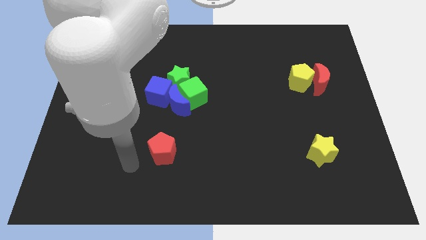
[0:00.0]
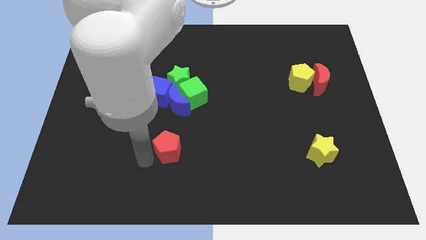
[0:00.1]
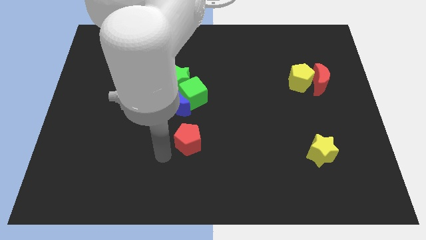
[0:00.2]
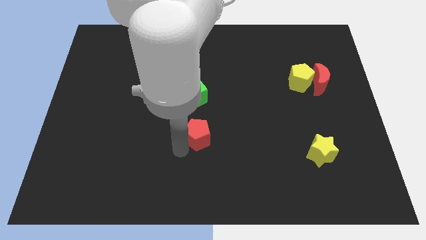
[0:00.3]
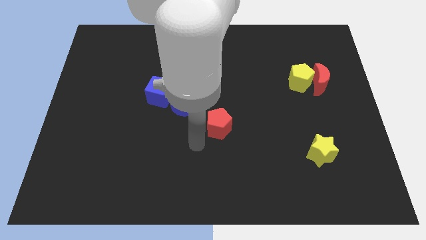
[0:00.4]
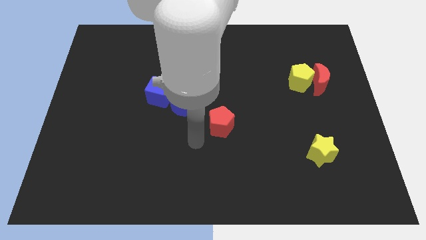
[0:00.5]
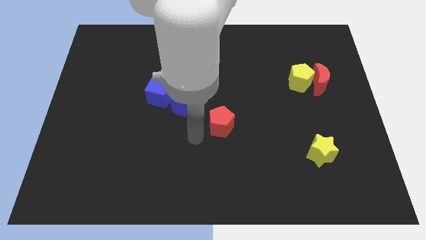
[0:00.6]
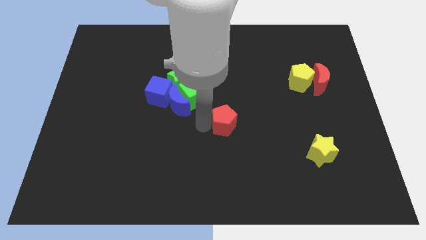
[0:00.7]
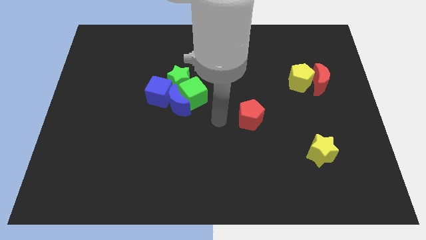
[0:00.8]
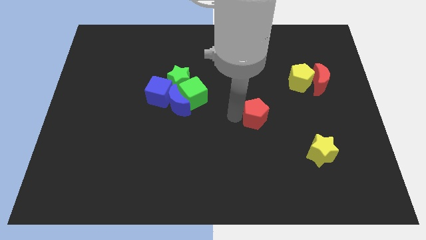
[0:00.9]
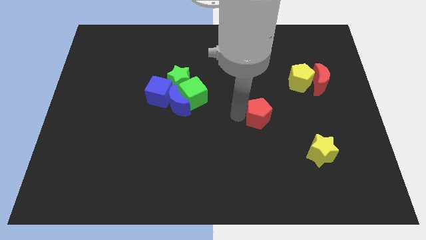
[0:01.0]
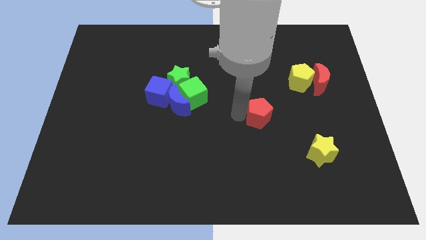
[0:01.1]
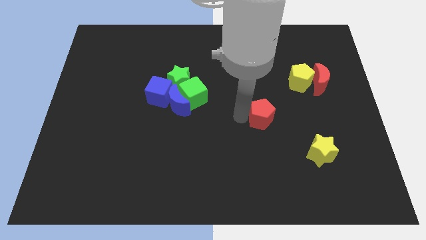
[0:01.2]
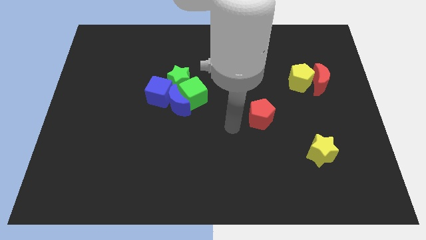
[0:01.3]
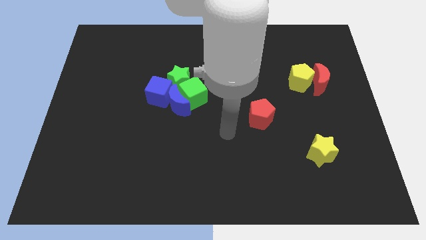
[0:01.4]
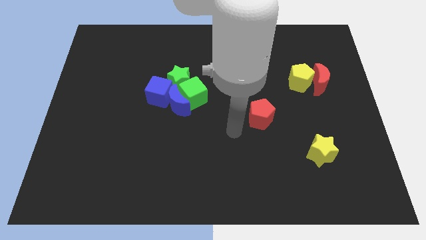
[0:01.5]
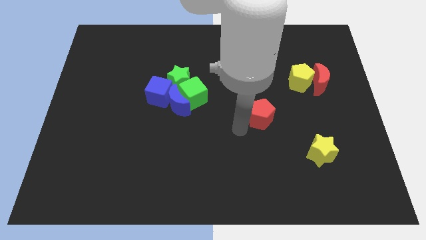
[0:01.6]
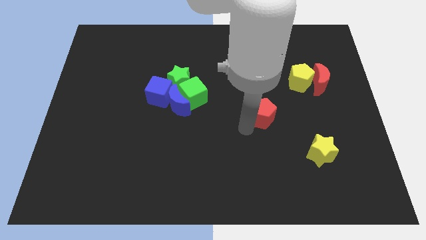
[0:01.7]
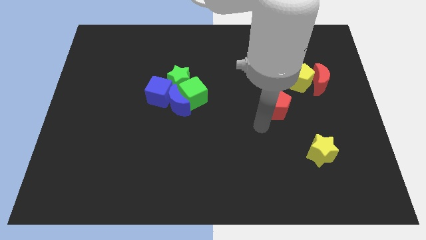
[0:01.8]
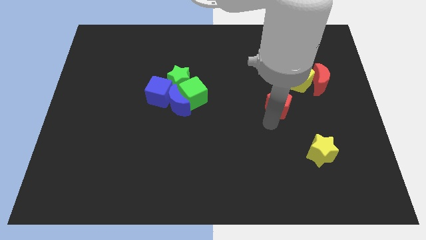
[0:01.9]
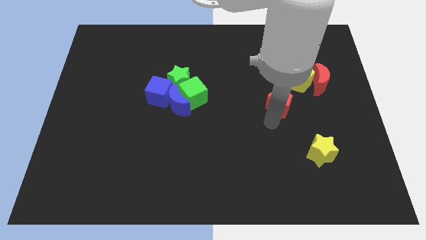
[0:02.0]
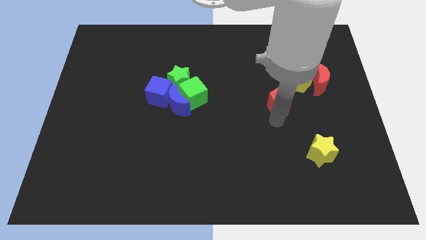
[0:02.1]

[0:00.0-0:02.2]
move the red pentagon towards yellow pentagon

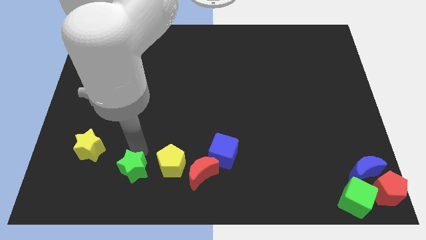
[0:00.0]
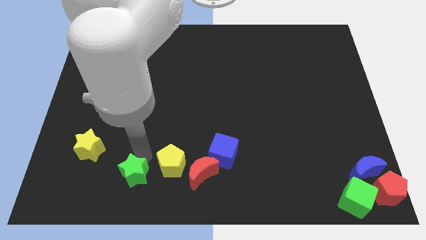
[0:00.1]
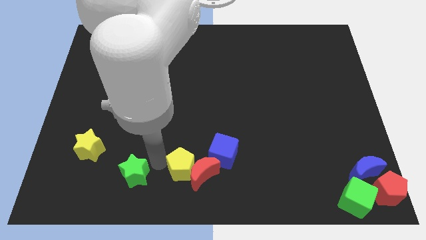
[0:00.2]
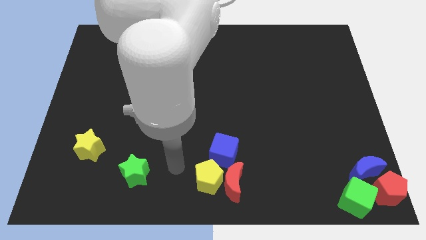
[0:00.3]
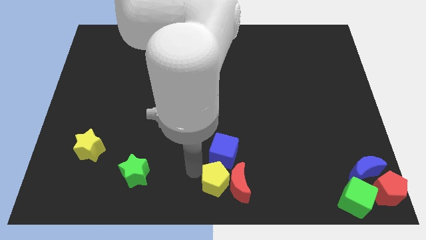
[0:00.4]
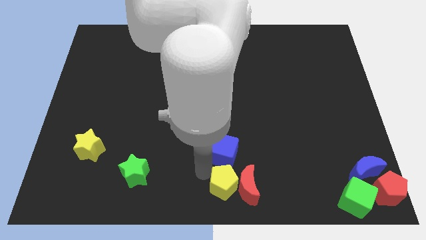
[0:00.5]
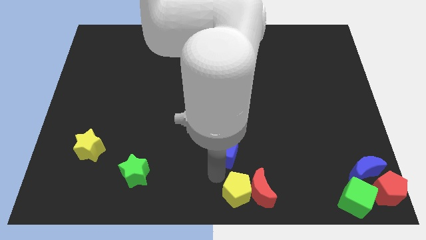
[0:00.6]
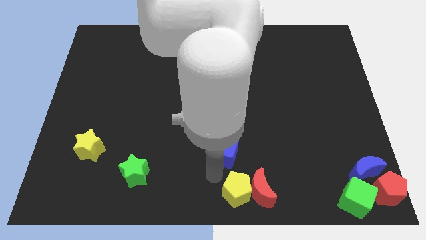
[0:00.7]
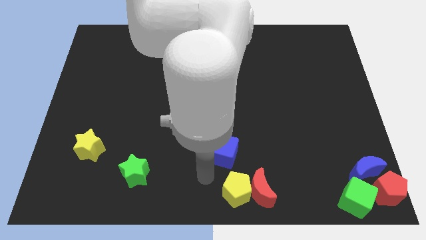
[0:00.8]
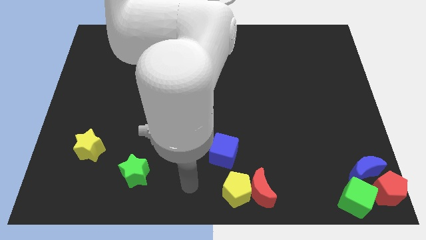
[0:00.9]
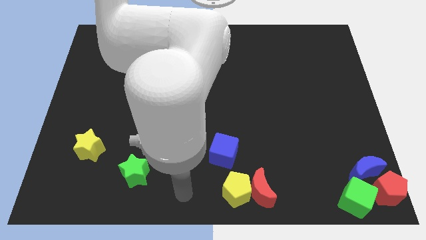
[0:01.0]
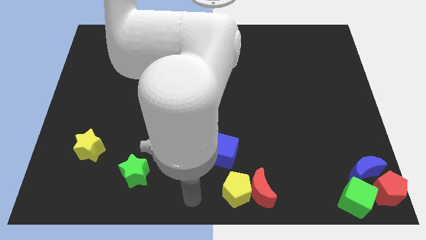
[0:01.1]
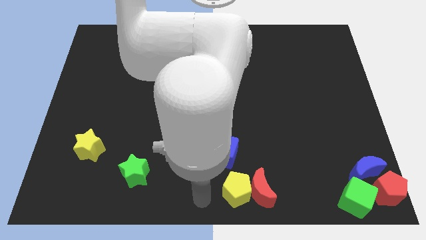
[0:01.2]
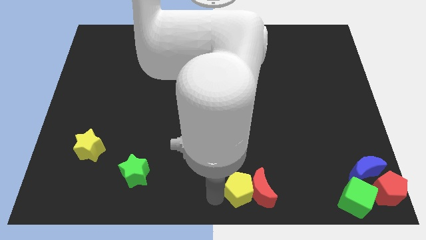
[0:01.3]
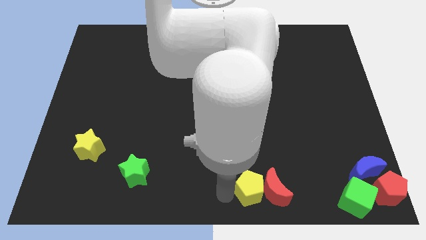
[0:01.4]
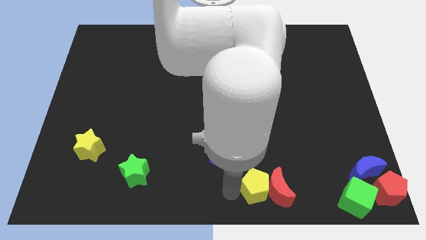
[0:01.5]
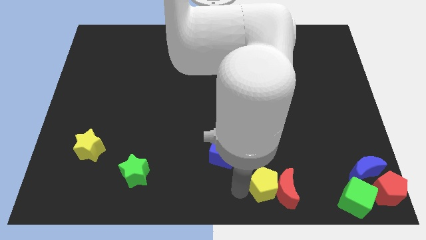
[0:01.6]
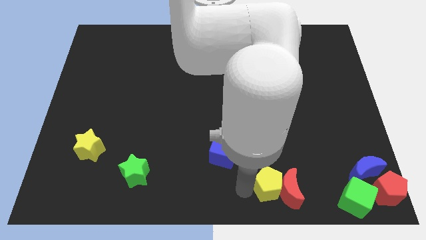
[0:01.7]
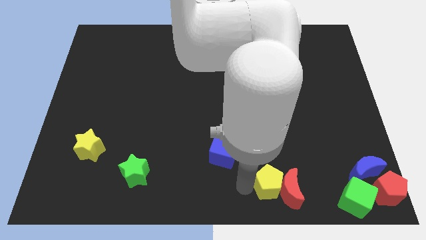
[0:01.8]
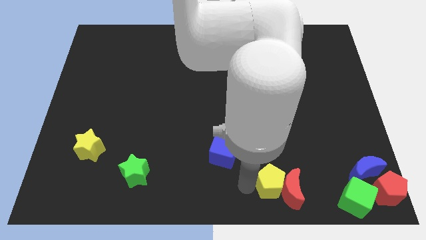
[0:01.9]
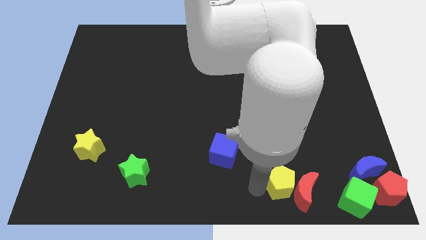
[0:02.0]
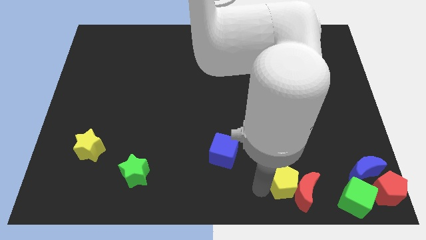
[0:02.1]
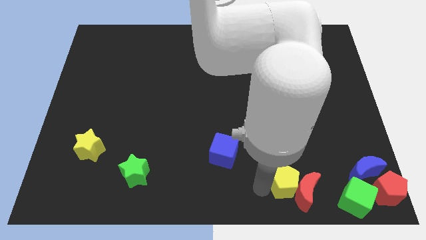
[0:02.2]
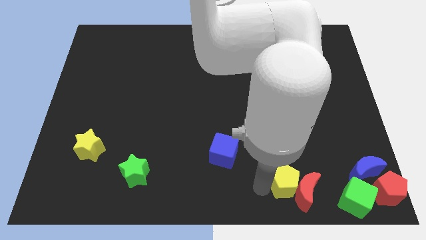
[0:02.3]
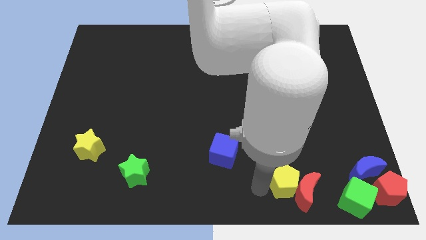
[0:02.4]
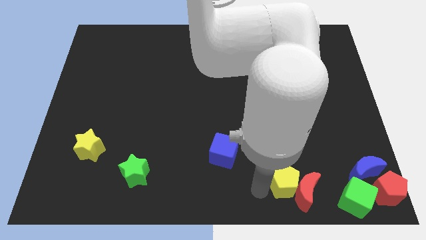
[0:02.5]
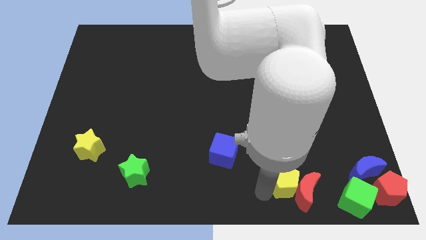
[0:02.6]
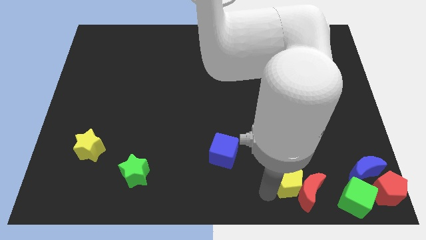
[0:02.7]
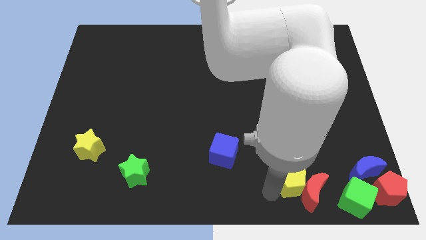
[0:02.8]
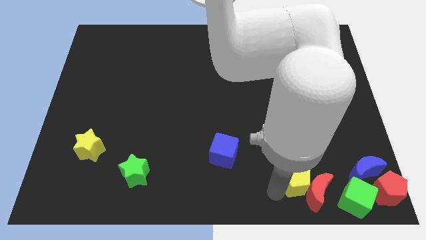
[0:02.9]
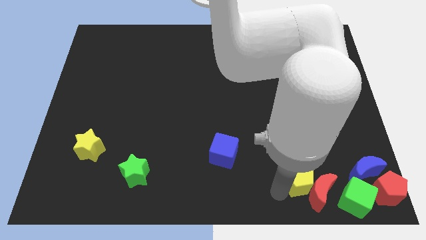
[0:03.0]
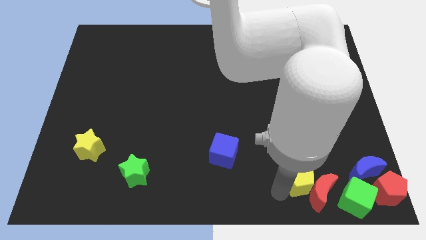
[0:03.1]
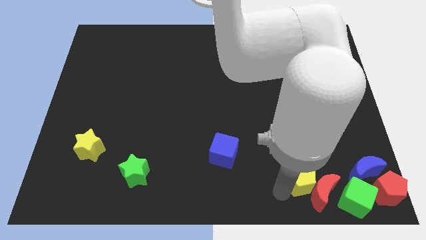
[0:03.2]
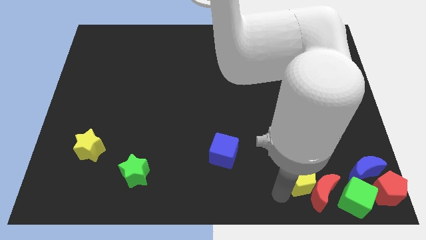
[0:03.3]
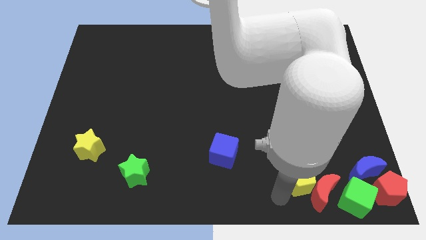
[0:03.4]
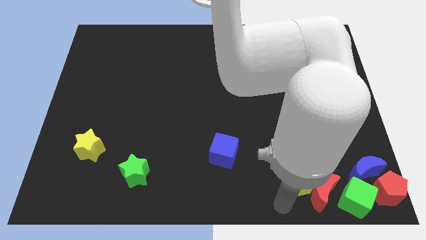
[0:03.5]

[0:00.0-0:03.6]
push the yellow pentagon and red moon towards the bottom right corner

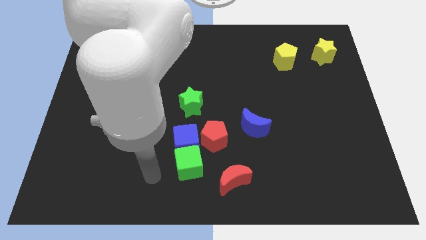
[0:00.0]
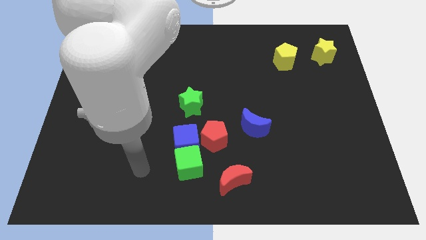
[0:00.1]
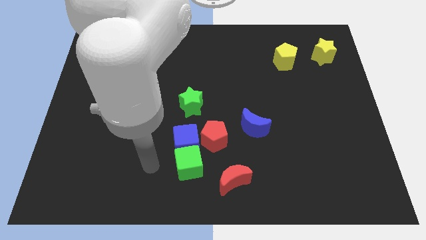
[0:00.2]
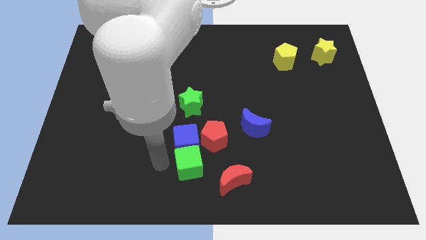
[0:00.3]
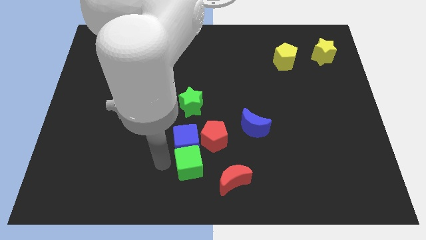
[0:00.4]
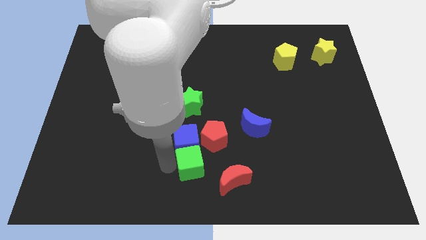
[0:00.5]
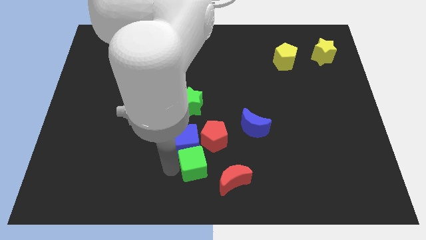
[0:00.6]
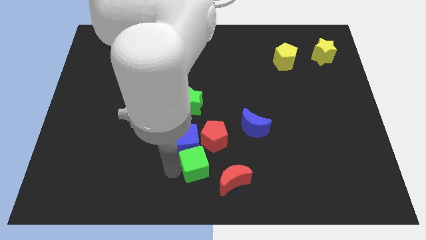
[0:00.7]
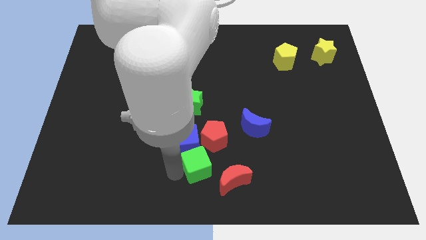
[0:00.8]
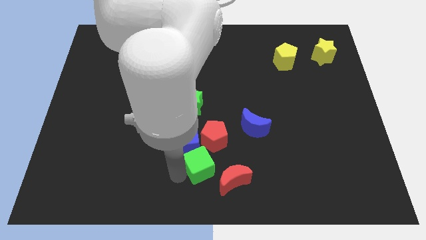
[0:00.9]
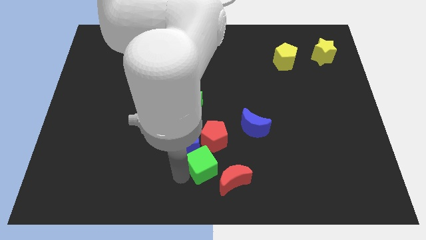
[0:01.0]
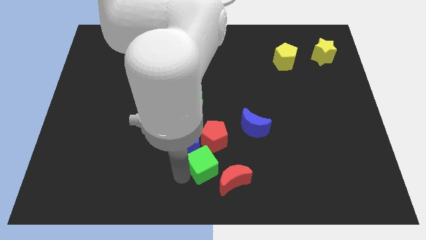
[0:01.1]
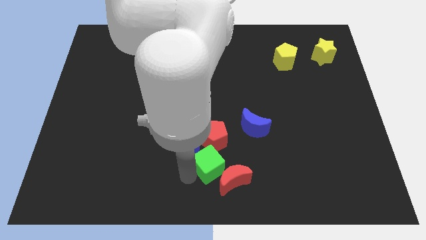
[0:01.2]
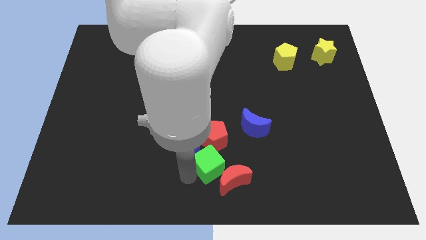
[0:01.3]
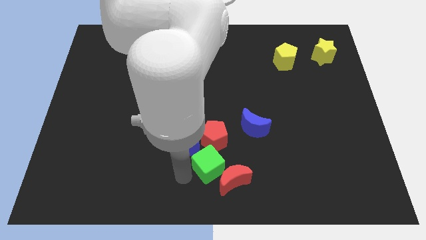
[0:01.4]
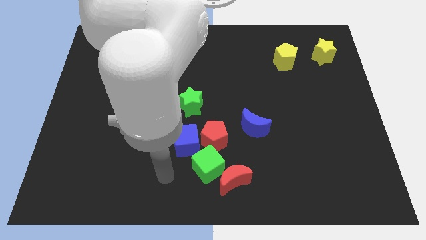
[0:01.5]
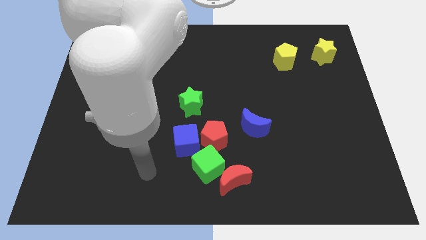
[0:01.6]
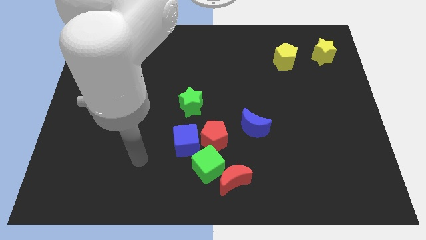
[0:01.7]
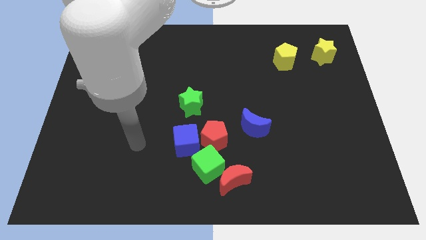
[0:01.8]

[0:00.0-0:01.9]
move the green cube down to the red pentagon

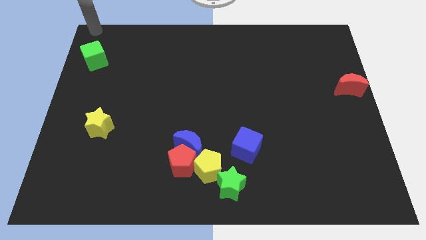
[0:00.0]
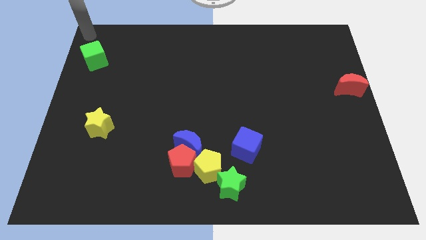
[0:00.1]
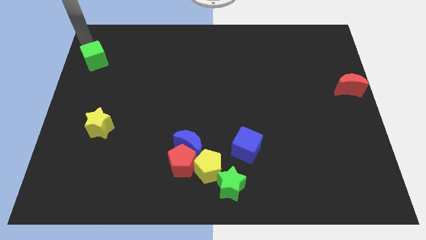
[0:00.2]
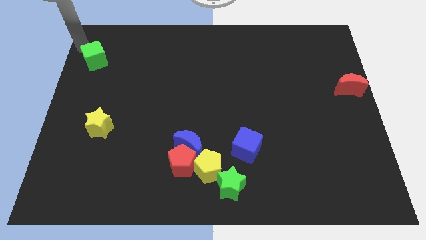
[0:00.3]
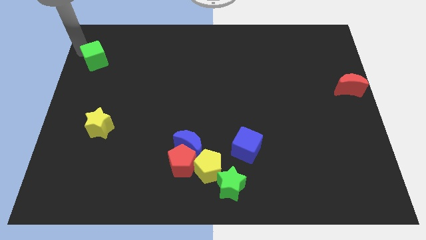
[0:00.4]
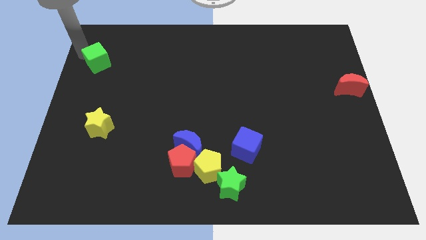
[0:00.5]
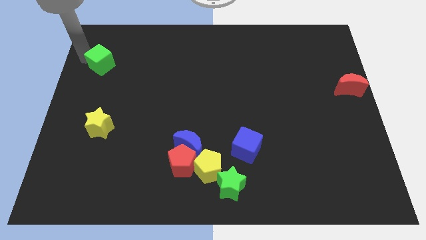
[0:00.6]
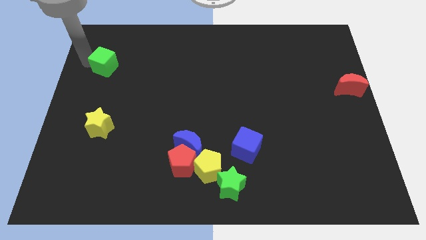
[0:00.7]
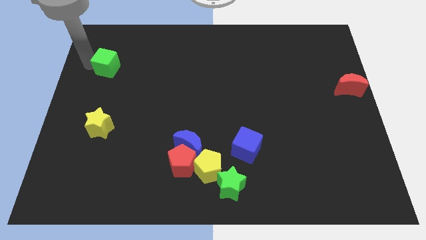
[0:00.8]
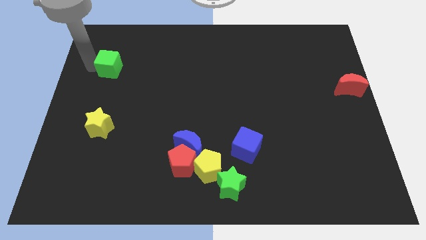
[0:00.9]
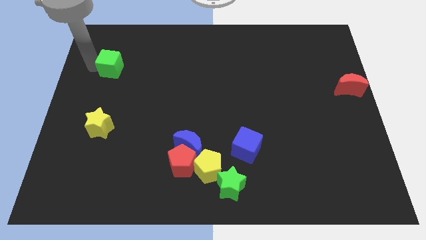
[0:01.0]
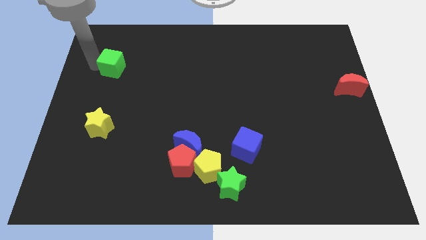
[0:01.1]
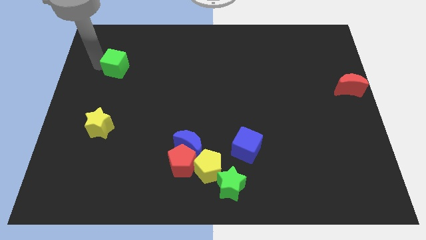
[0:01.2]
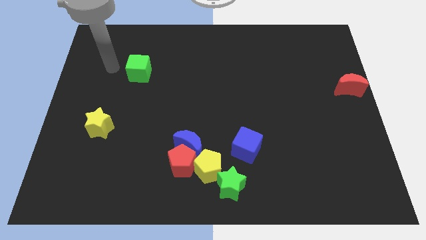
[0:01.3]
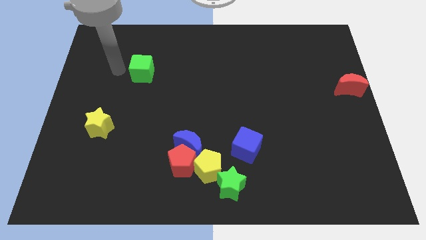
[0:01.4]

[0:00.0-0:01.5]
place the green cube diagonally top right of yellow star
